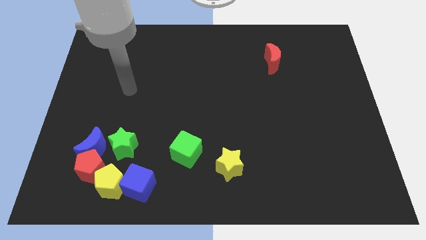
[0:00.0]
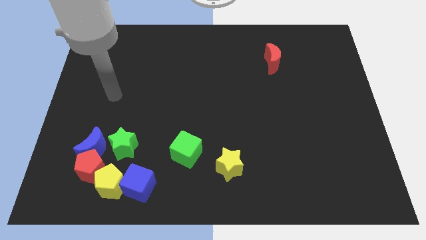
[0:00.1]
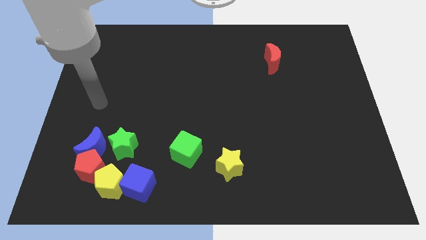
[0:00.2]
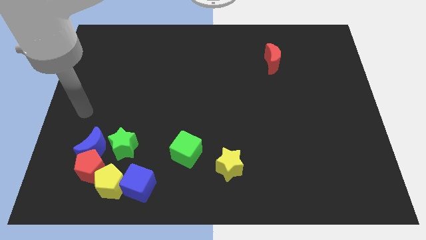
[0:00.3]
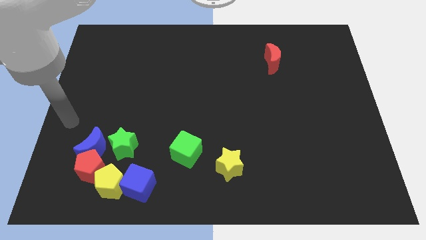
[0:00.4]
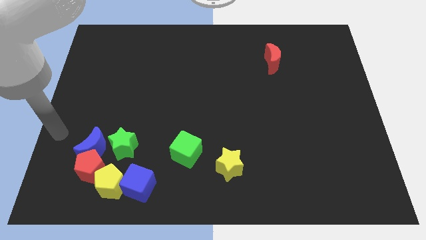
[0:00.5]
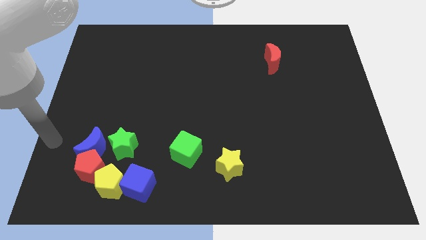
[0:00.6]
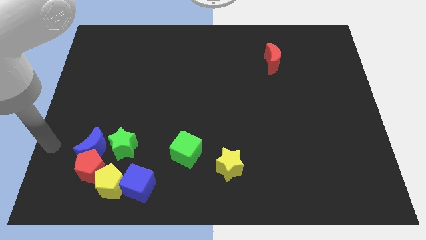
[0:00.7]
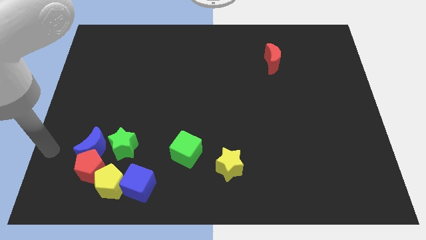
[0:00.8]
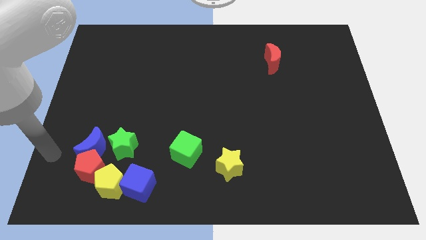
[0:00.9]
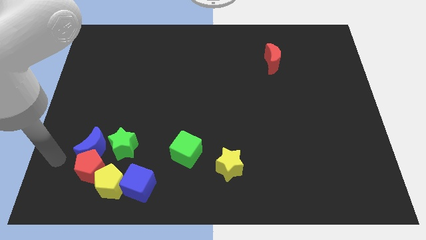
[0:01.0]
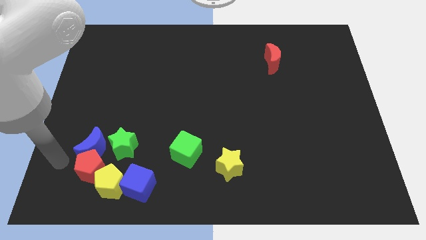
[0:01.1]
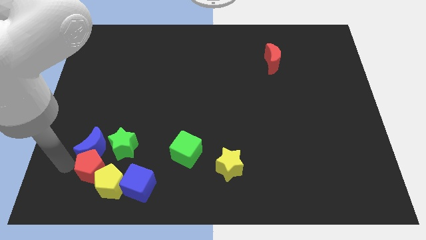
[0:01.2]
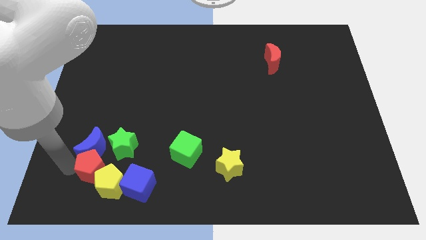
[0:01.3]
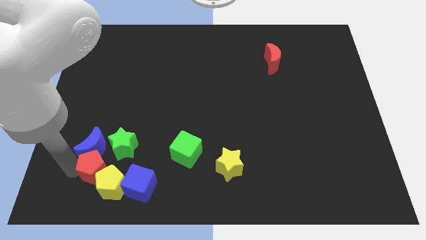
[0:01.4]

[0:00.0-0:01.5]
place the arm left to the red pentagon

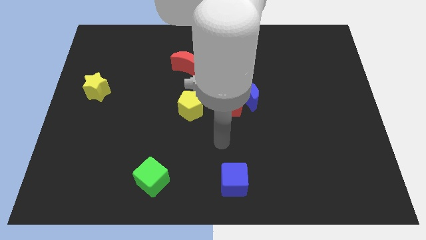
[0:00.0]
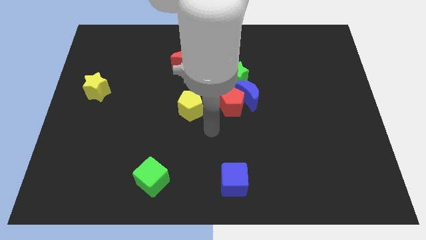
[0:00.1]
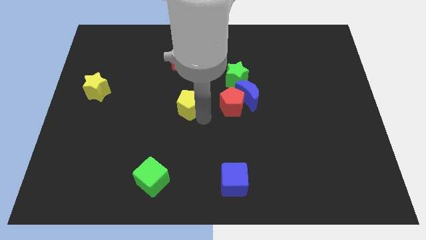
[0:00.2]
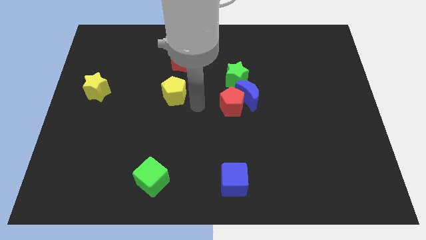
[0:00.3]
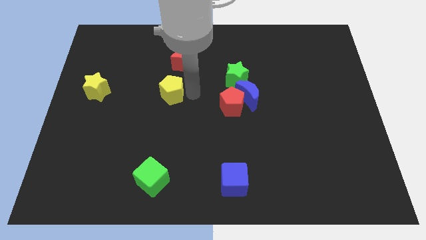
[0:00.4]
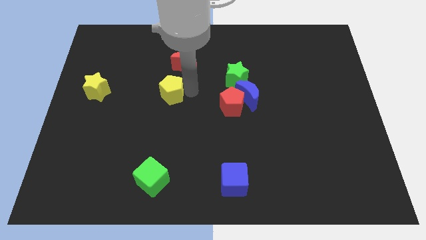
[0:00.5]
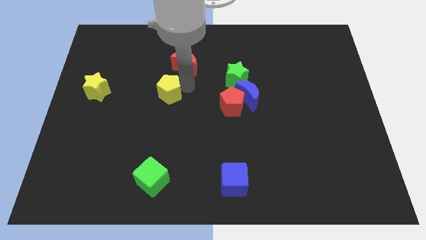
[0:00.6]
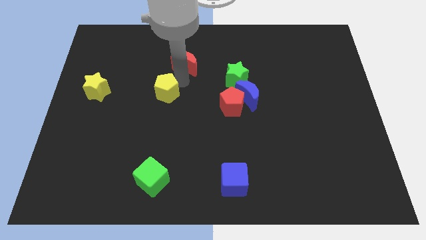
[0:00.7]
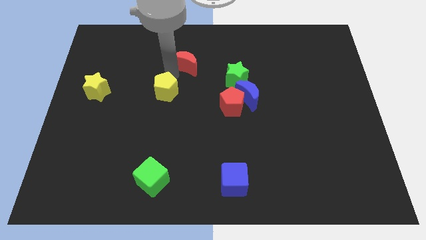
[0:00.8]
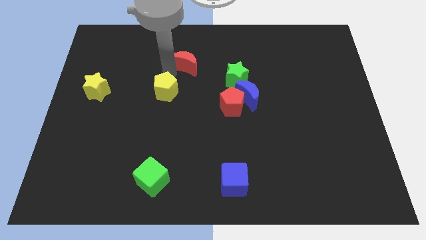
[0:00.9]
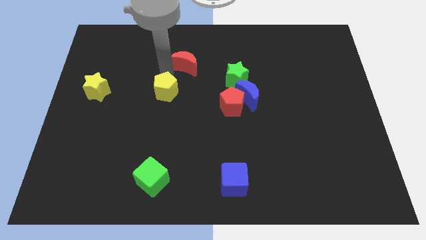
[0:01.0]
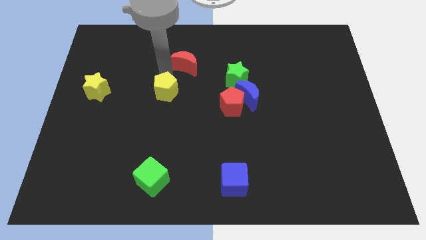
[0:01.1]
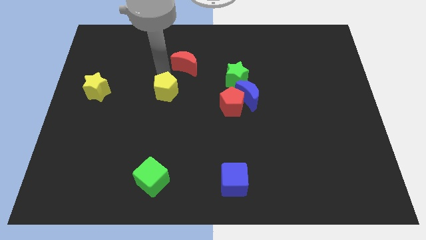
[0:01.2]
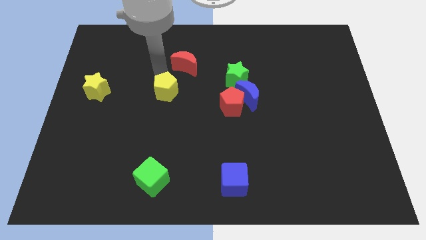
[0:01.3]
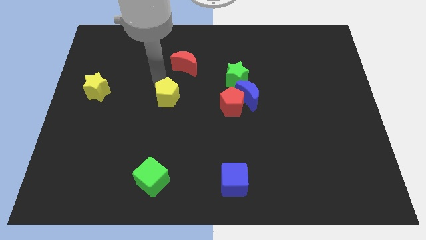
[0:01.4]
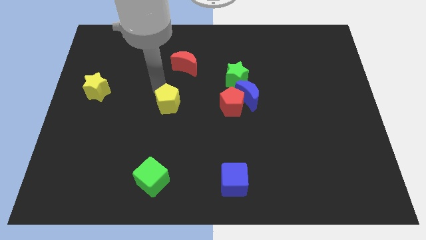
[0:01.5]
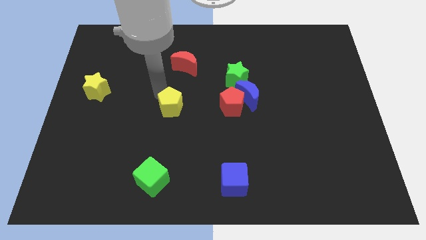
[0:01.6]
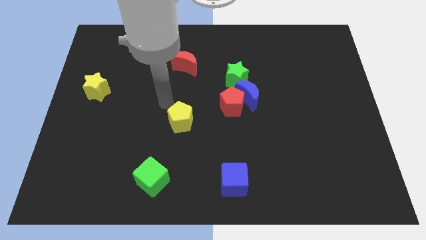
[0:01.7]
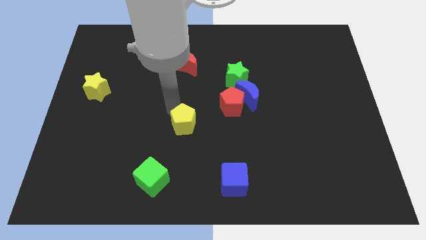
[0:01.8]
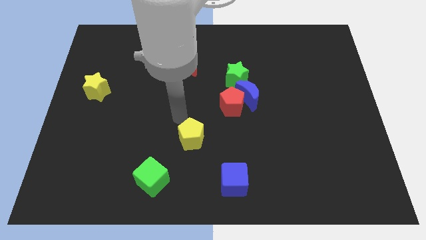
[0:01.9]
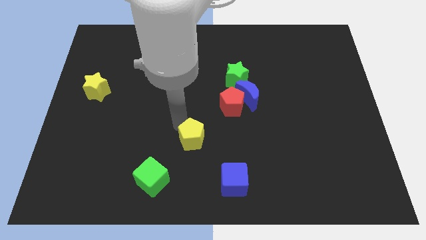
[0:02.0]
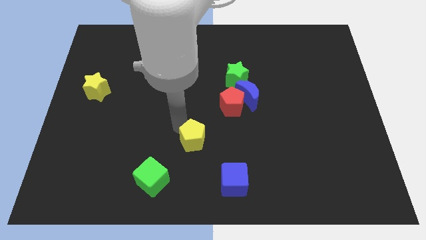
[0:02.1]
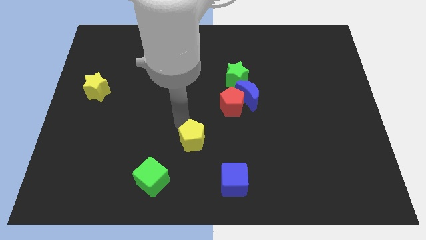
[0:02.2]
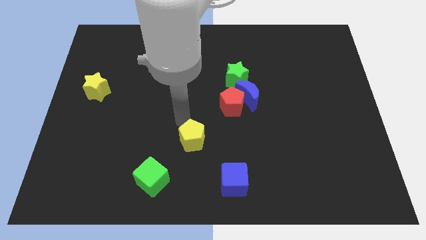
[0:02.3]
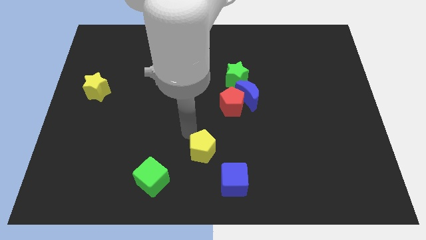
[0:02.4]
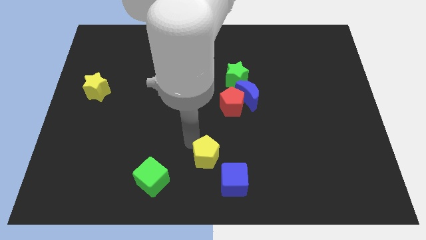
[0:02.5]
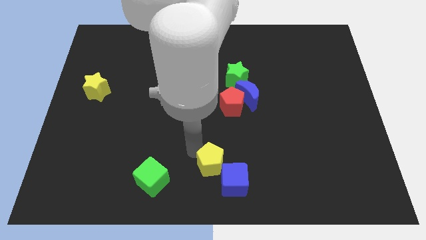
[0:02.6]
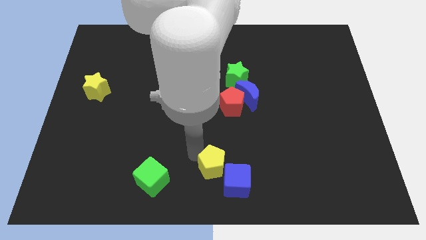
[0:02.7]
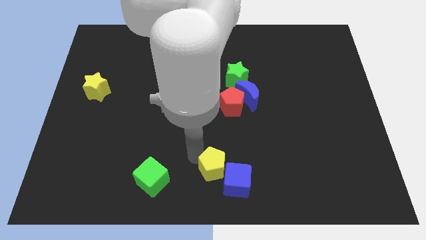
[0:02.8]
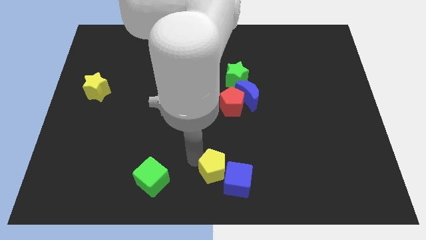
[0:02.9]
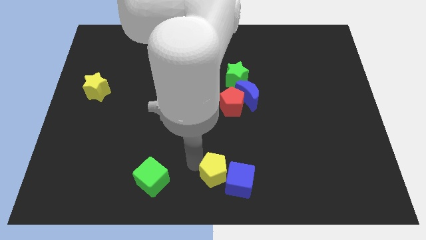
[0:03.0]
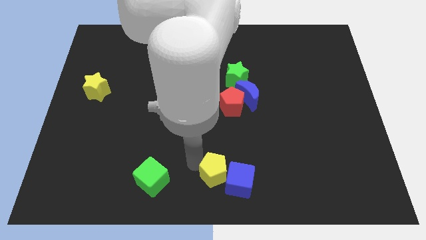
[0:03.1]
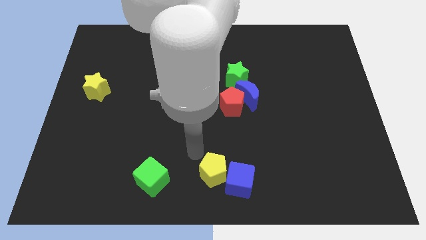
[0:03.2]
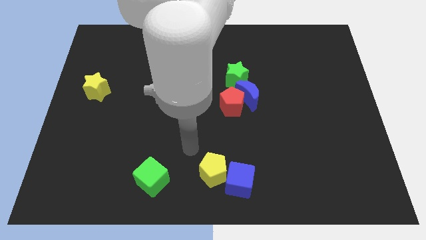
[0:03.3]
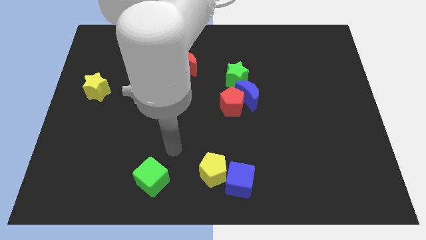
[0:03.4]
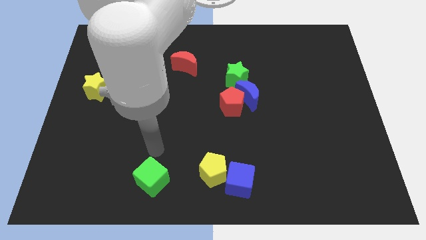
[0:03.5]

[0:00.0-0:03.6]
place the yellow pentagon in between blue cube and green cube

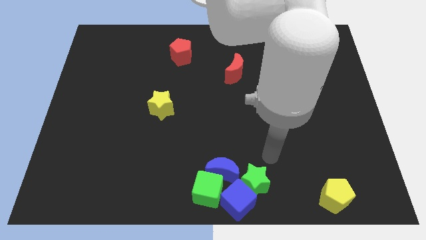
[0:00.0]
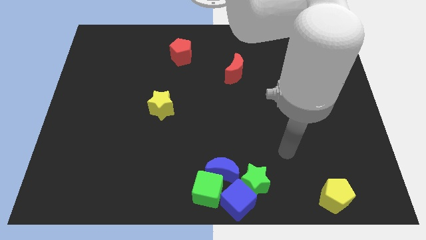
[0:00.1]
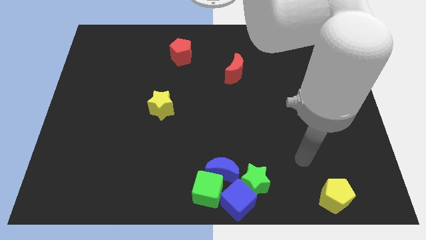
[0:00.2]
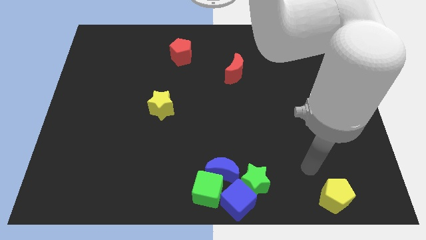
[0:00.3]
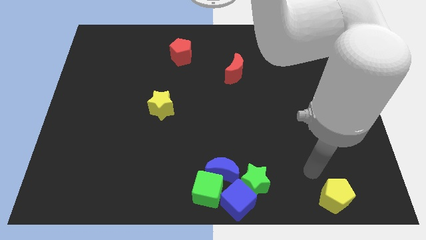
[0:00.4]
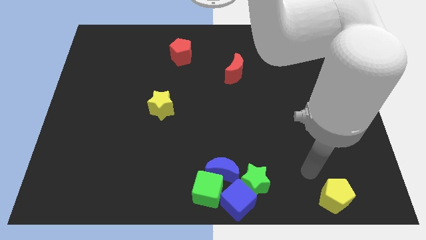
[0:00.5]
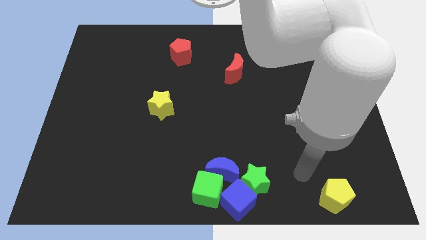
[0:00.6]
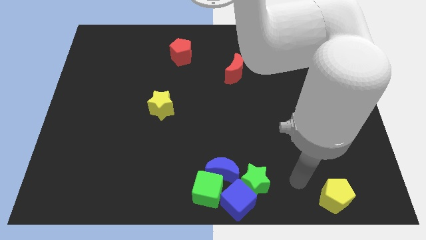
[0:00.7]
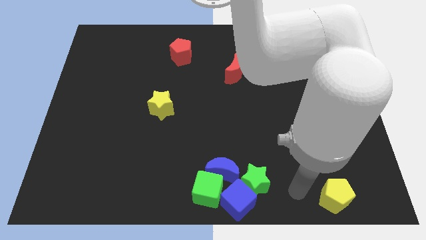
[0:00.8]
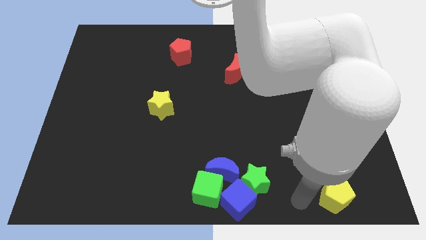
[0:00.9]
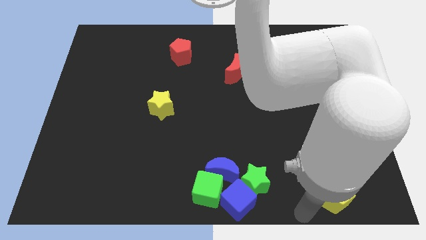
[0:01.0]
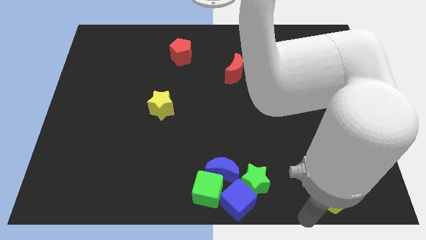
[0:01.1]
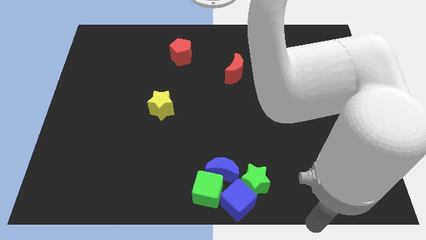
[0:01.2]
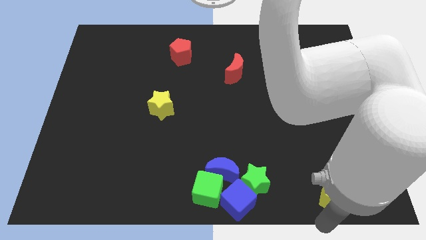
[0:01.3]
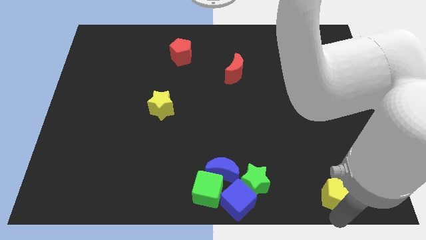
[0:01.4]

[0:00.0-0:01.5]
move the arm down to the yellow pentagon

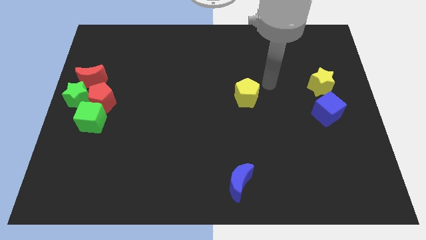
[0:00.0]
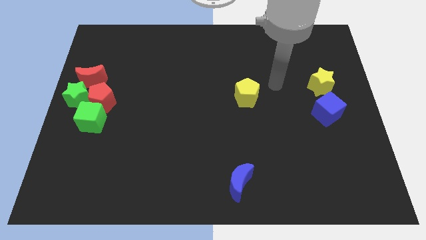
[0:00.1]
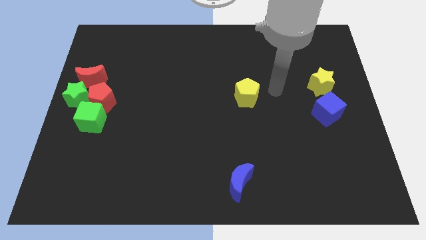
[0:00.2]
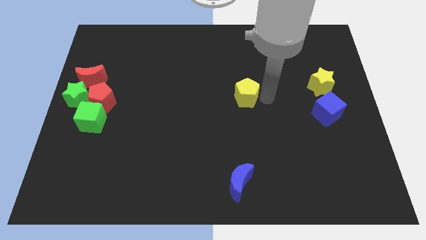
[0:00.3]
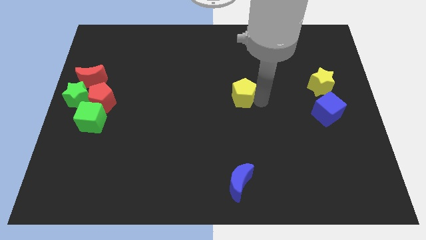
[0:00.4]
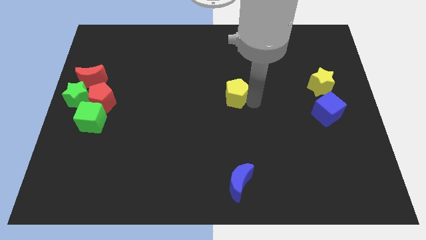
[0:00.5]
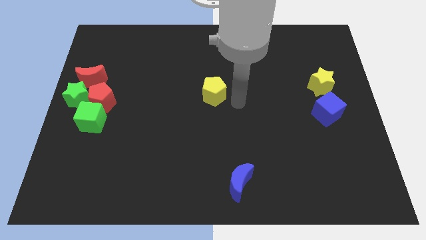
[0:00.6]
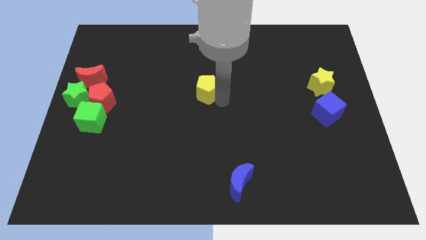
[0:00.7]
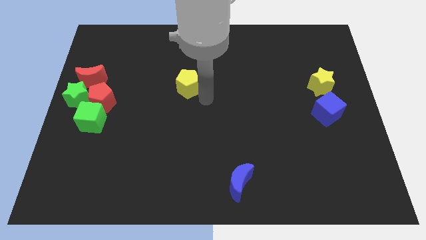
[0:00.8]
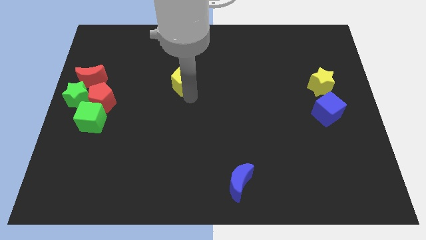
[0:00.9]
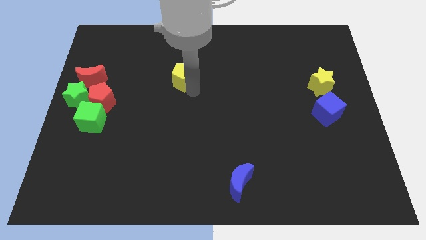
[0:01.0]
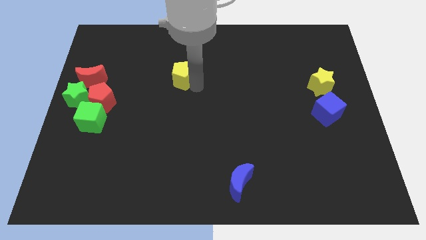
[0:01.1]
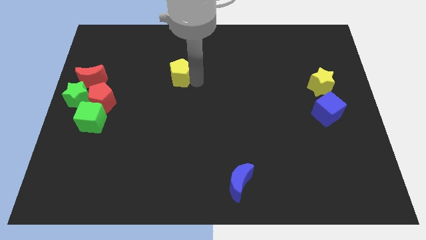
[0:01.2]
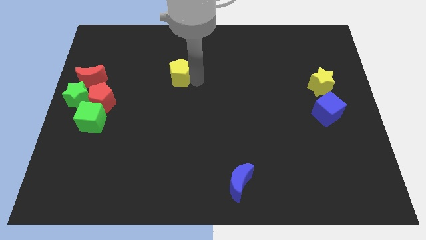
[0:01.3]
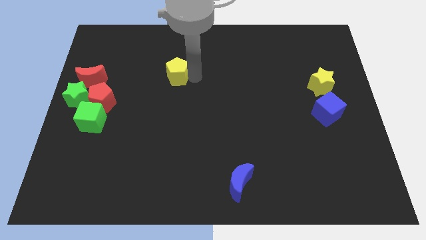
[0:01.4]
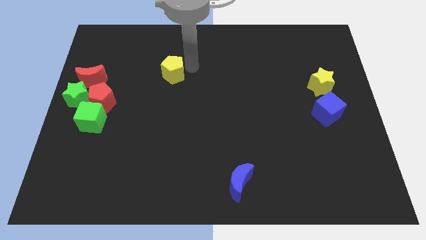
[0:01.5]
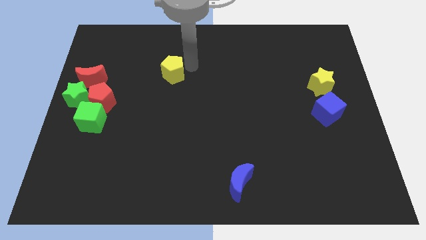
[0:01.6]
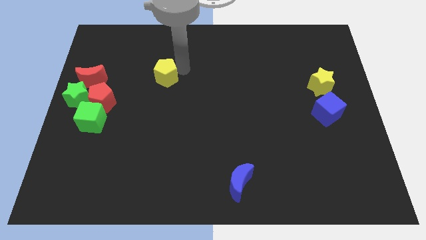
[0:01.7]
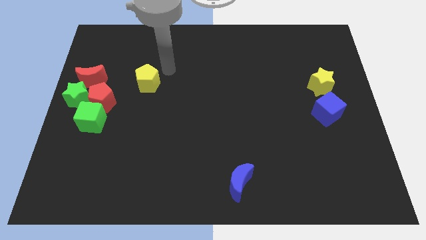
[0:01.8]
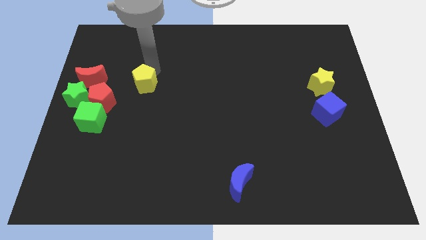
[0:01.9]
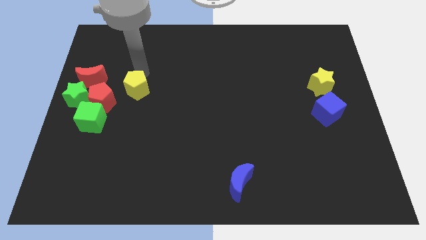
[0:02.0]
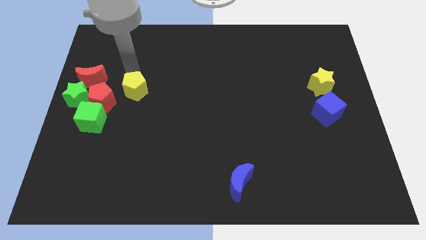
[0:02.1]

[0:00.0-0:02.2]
move yellow pentagon towards red pentagon
